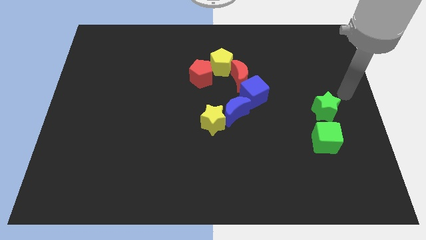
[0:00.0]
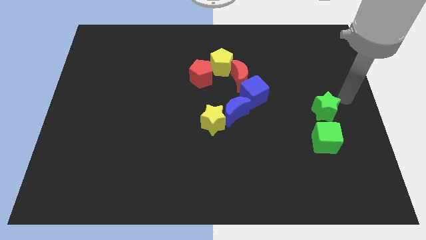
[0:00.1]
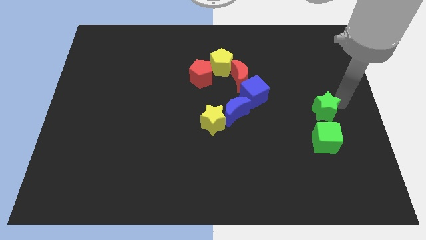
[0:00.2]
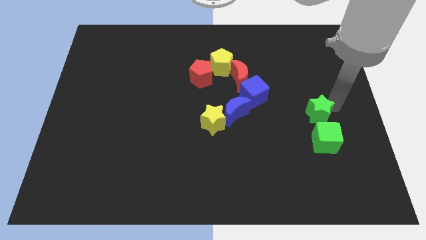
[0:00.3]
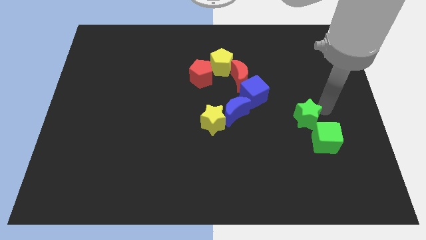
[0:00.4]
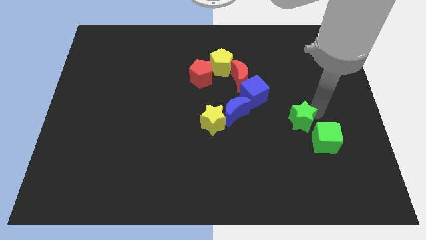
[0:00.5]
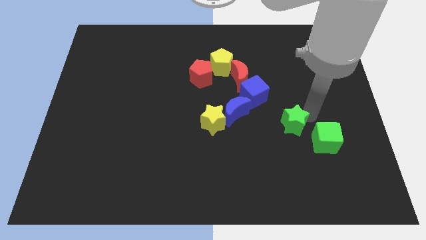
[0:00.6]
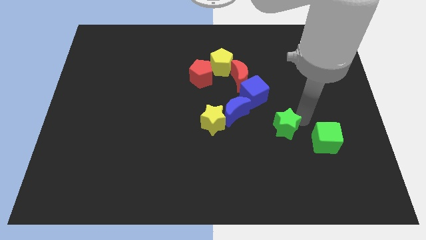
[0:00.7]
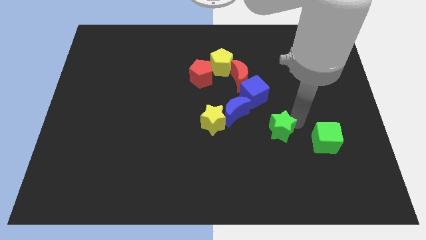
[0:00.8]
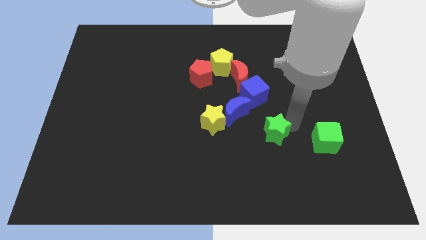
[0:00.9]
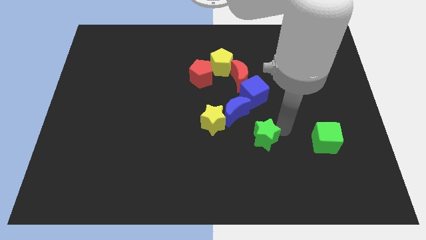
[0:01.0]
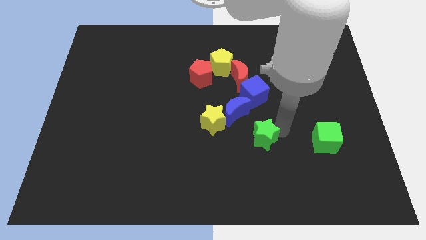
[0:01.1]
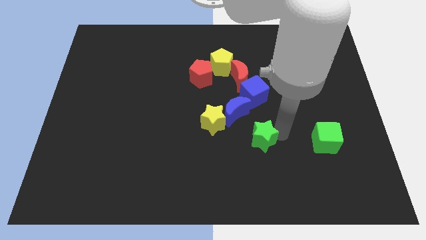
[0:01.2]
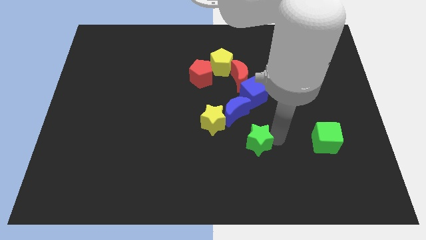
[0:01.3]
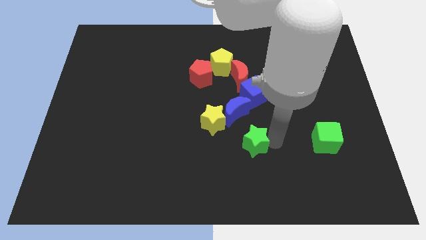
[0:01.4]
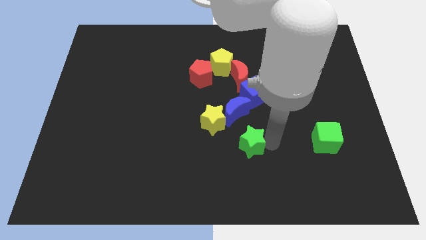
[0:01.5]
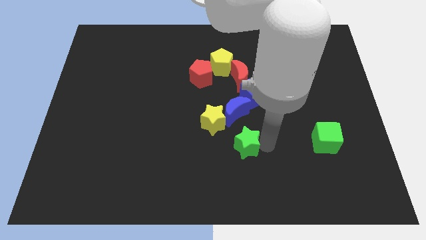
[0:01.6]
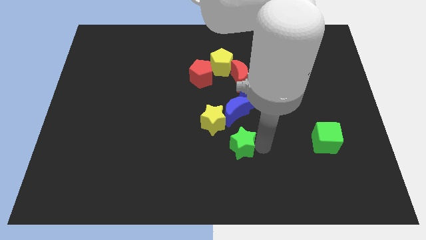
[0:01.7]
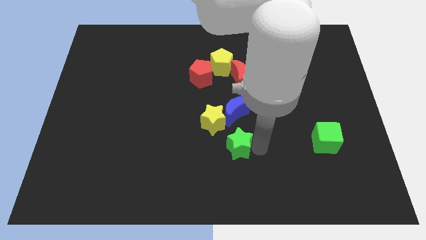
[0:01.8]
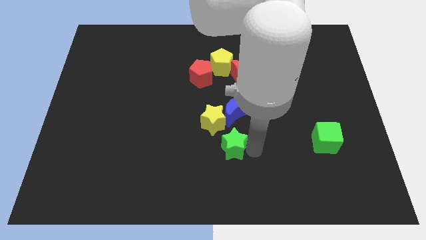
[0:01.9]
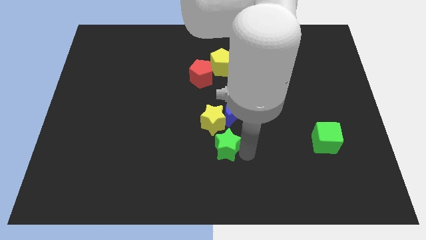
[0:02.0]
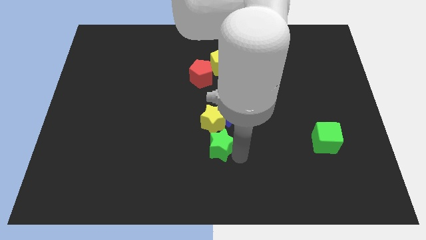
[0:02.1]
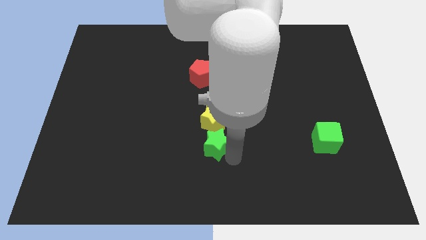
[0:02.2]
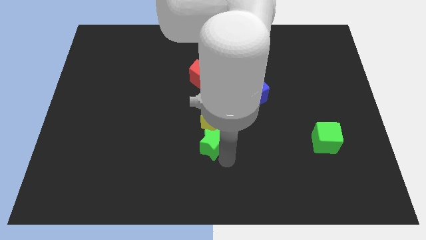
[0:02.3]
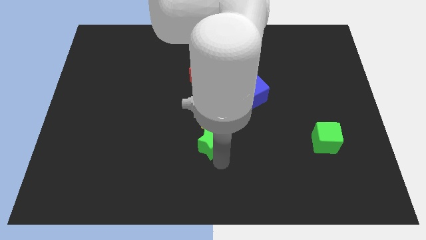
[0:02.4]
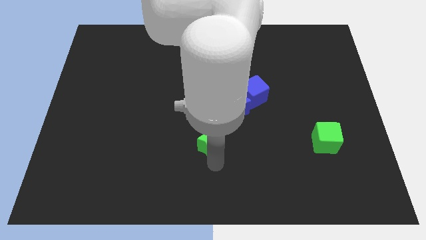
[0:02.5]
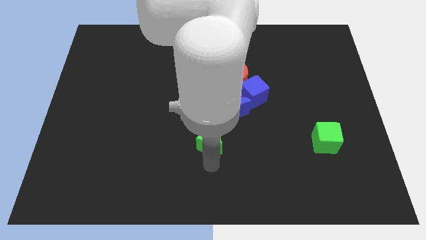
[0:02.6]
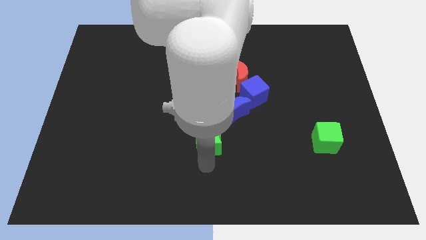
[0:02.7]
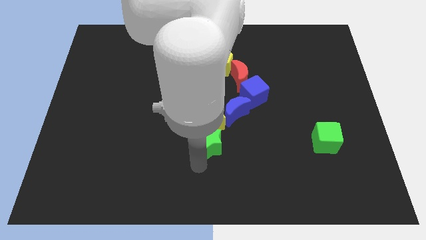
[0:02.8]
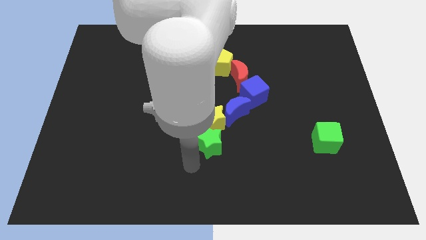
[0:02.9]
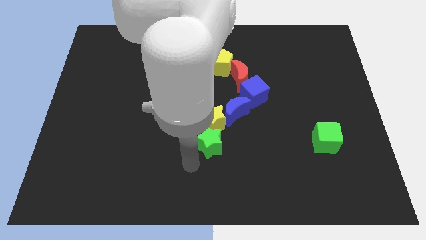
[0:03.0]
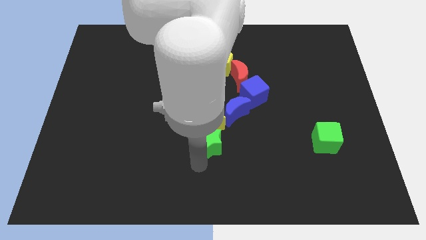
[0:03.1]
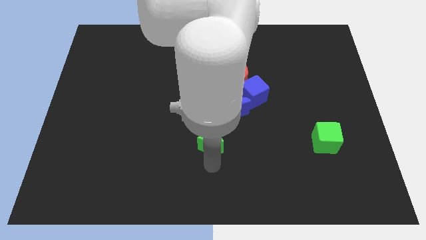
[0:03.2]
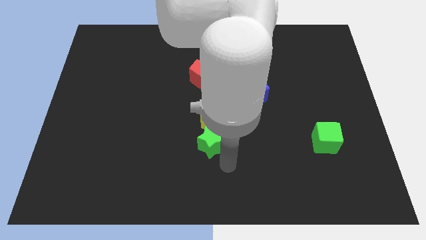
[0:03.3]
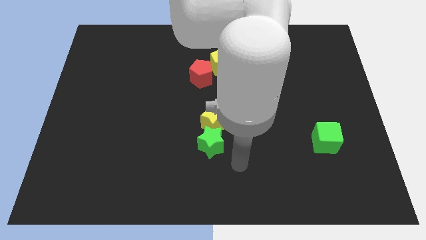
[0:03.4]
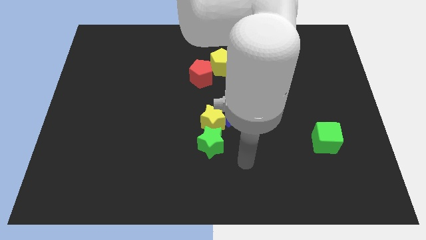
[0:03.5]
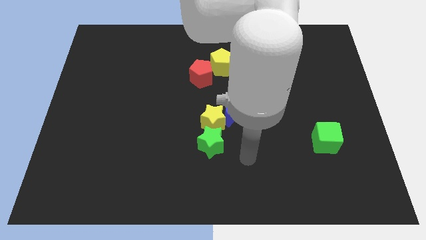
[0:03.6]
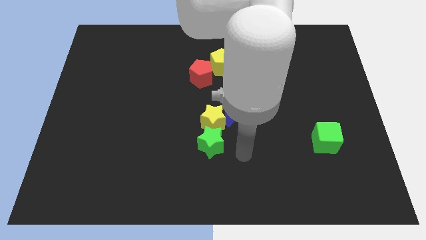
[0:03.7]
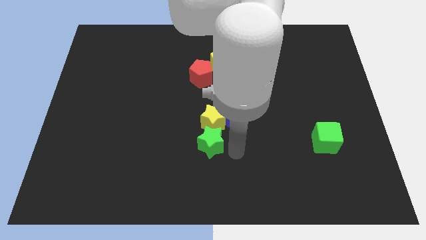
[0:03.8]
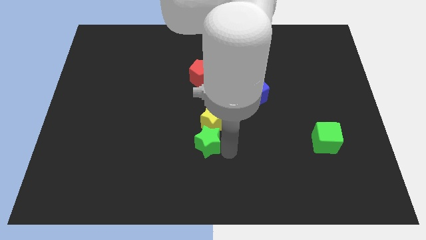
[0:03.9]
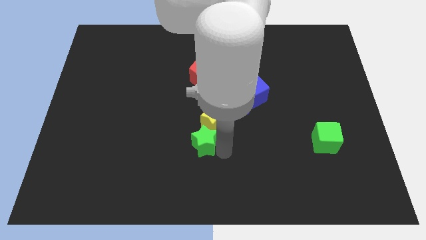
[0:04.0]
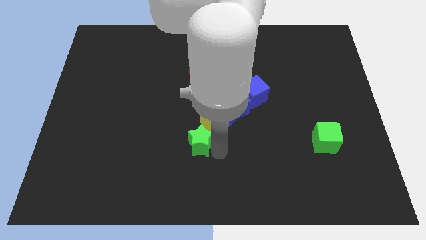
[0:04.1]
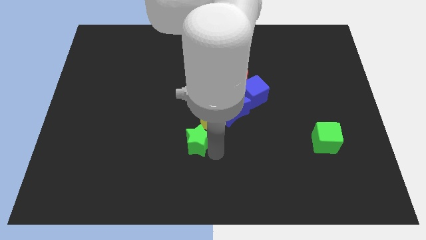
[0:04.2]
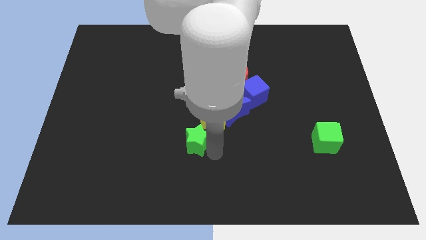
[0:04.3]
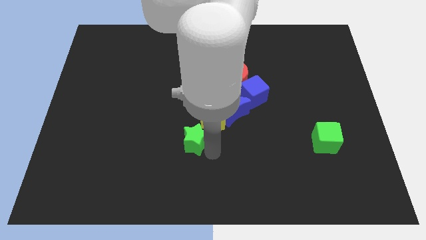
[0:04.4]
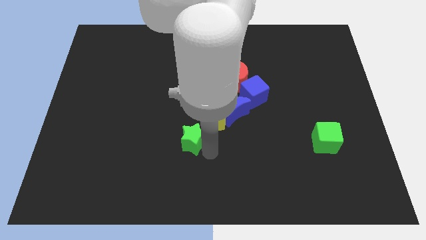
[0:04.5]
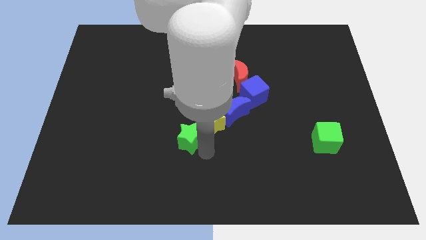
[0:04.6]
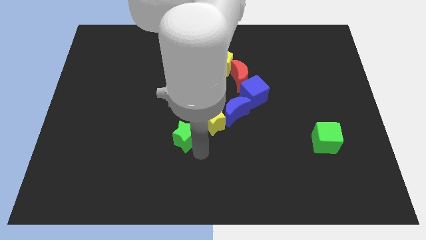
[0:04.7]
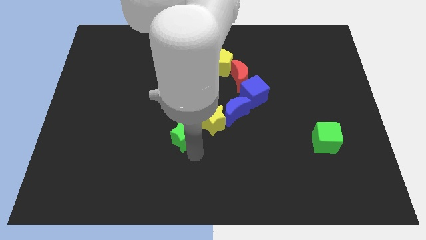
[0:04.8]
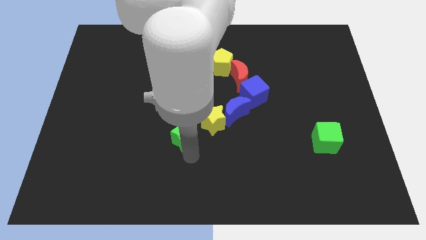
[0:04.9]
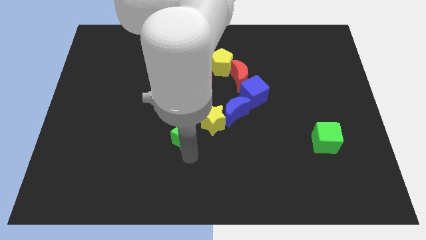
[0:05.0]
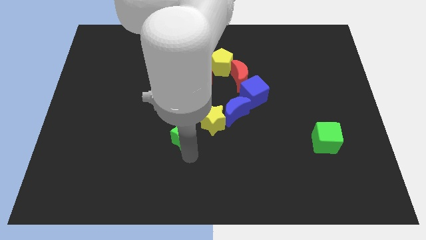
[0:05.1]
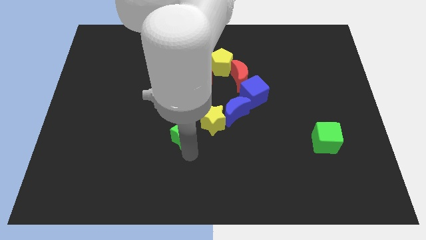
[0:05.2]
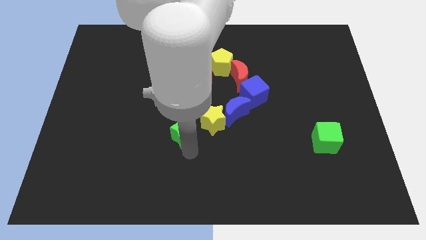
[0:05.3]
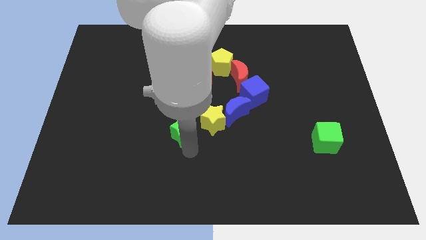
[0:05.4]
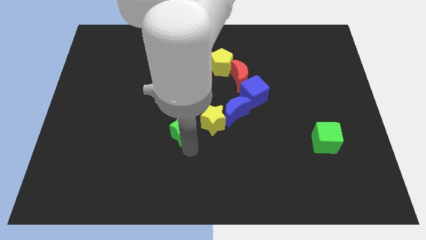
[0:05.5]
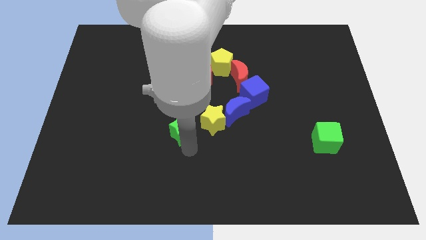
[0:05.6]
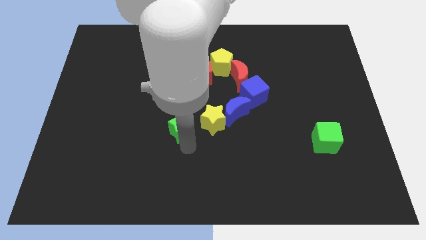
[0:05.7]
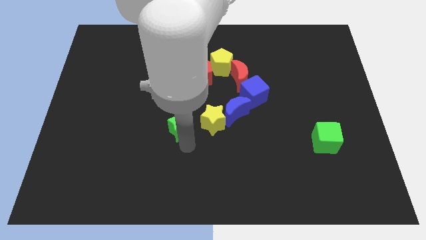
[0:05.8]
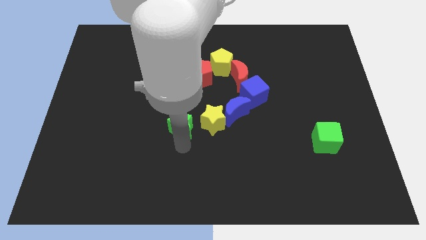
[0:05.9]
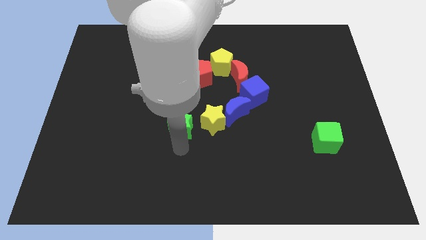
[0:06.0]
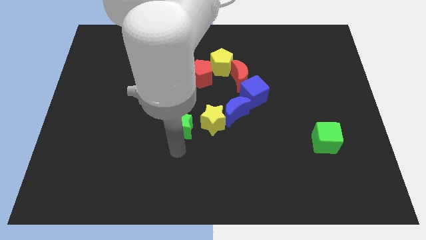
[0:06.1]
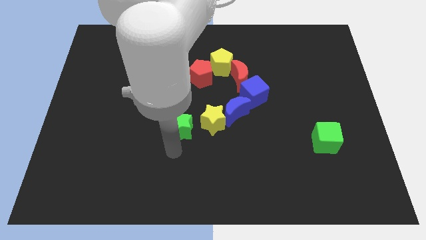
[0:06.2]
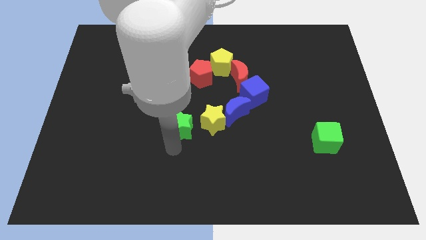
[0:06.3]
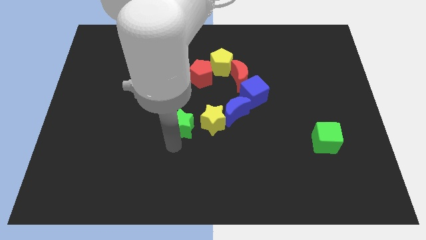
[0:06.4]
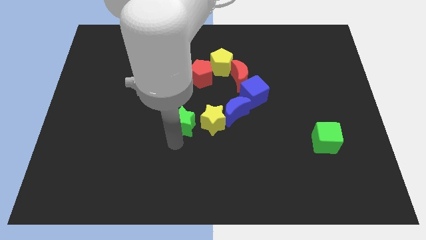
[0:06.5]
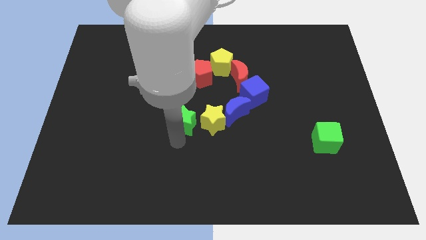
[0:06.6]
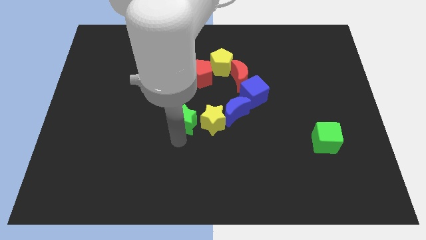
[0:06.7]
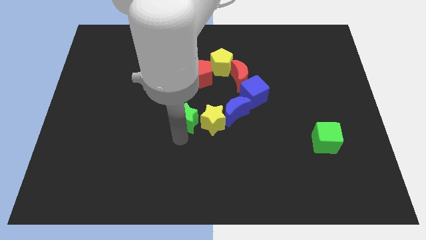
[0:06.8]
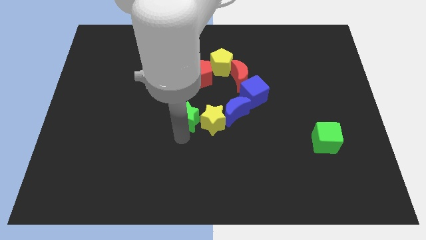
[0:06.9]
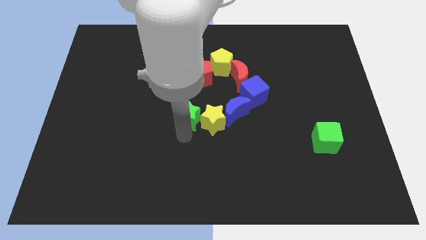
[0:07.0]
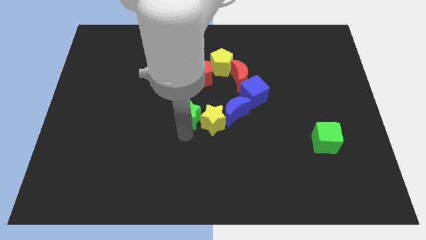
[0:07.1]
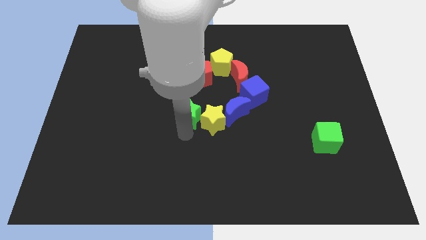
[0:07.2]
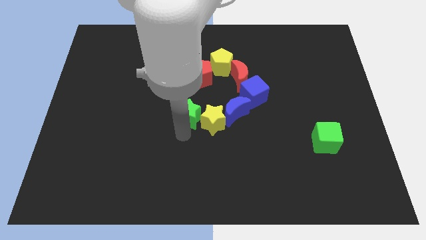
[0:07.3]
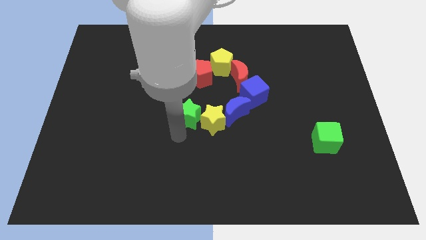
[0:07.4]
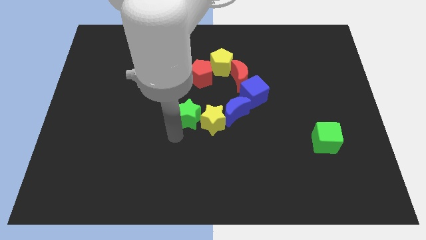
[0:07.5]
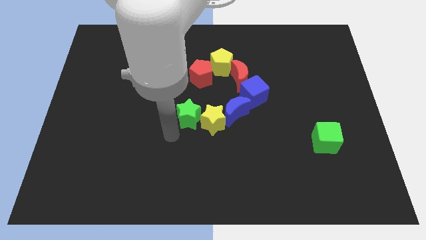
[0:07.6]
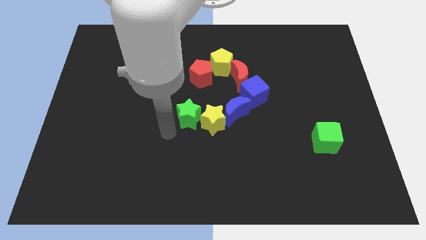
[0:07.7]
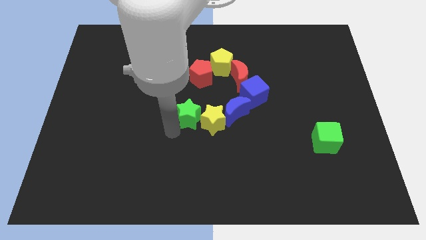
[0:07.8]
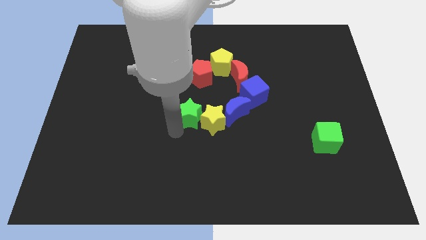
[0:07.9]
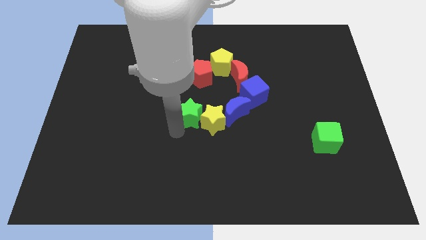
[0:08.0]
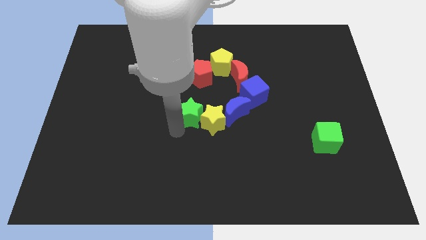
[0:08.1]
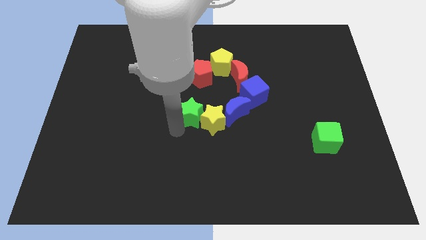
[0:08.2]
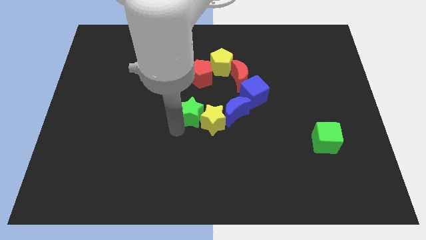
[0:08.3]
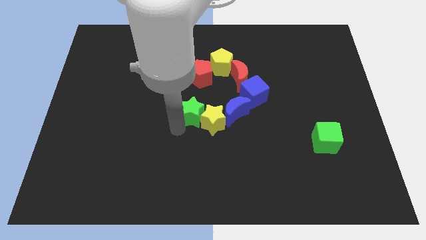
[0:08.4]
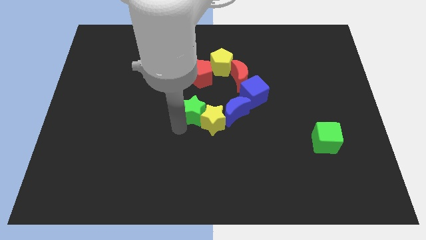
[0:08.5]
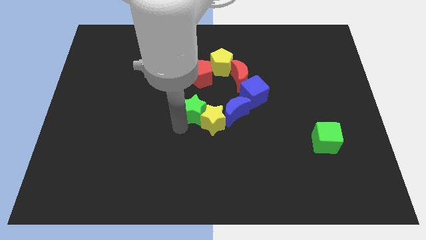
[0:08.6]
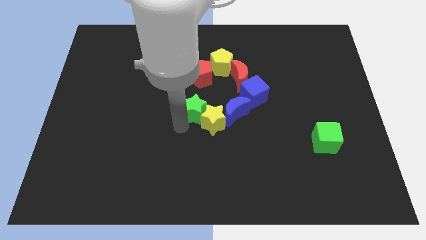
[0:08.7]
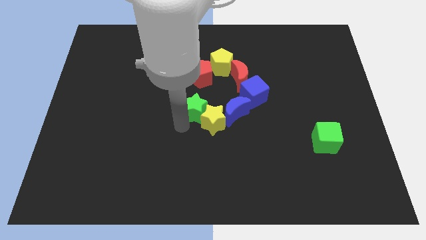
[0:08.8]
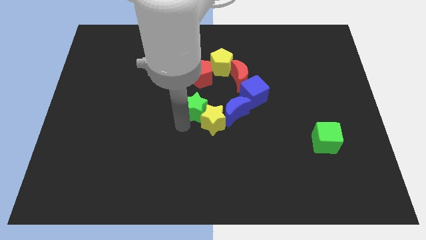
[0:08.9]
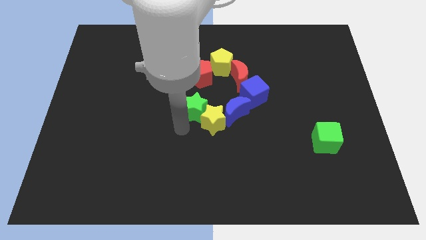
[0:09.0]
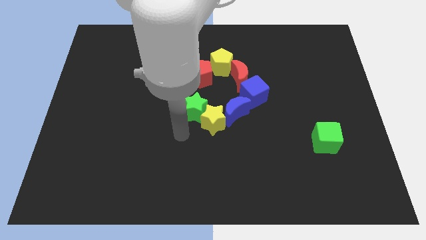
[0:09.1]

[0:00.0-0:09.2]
move the green star to the left of the yellow star in parallel position
